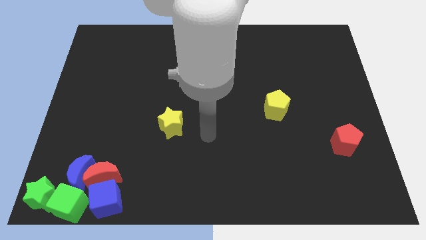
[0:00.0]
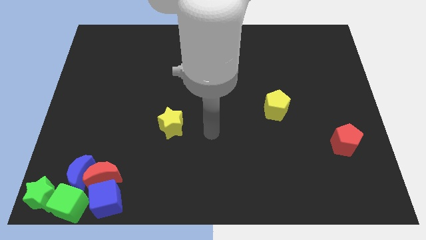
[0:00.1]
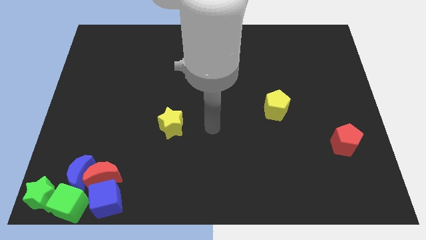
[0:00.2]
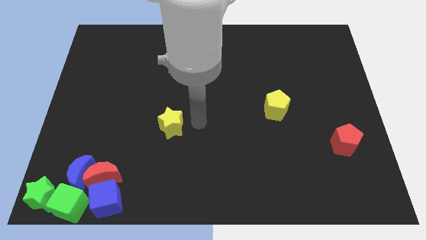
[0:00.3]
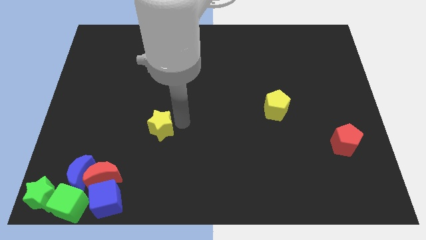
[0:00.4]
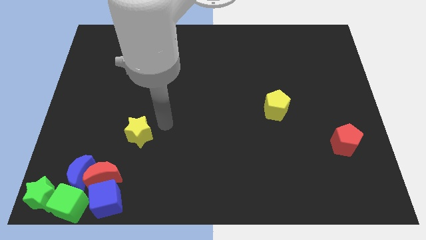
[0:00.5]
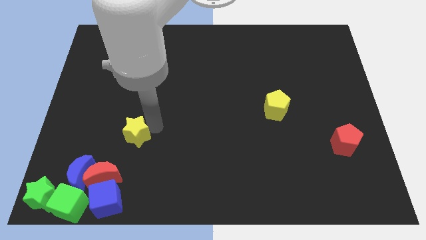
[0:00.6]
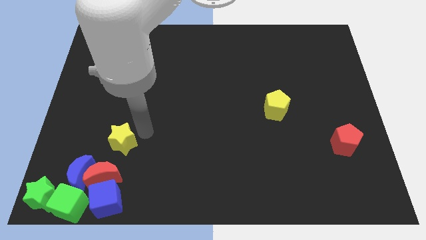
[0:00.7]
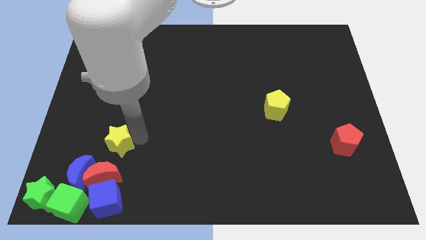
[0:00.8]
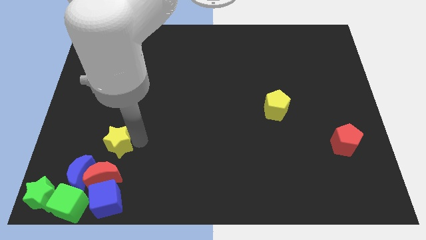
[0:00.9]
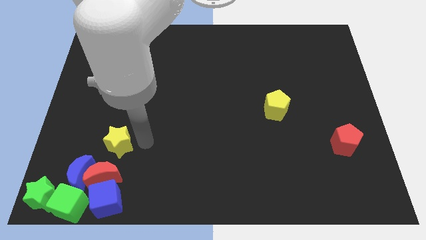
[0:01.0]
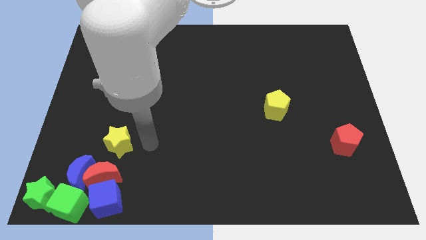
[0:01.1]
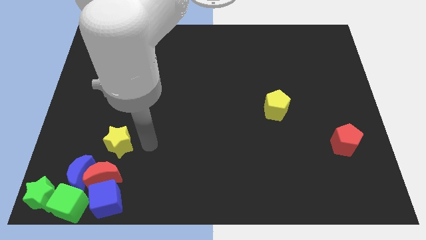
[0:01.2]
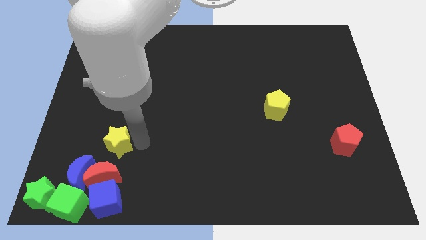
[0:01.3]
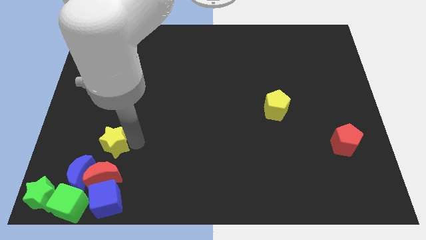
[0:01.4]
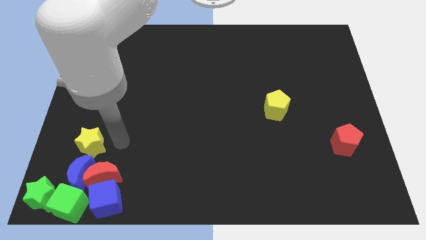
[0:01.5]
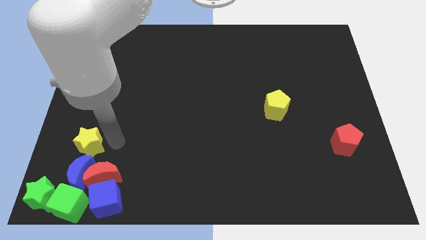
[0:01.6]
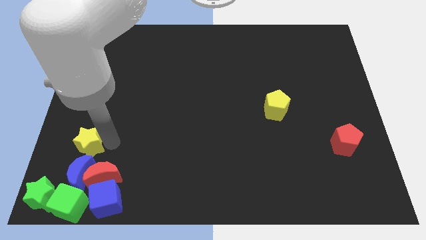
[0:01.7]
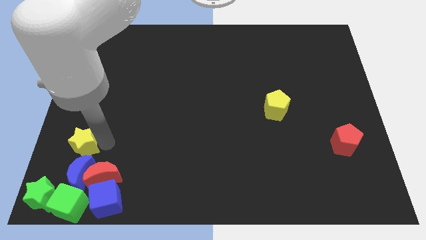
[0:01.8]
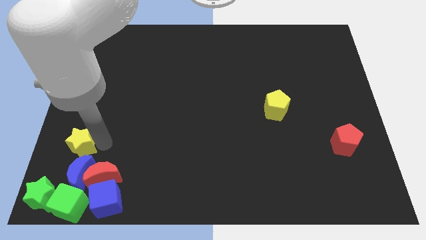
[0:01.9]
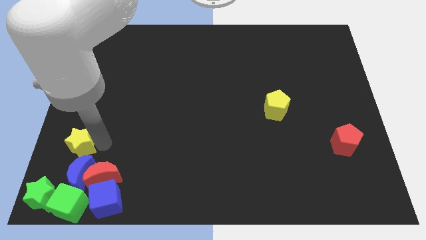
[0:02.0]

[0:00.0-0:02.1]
place the yellow star above the blue moon

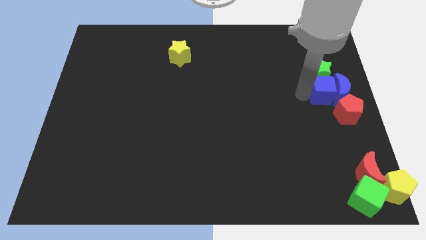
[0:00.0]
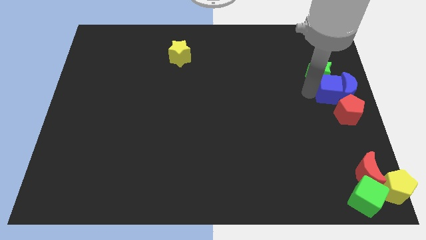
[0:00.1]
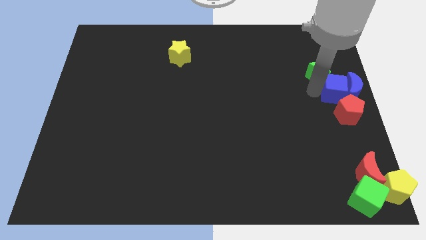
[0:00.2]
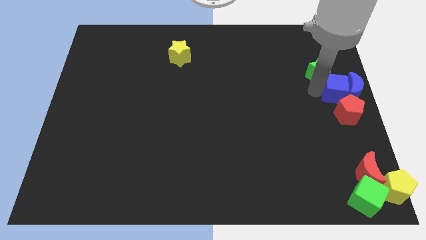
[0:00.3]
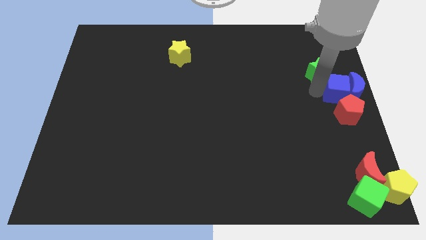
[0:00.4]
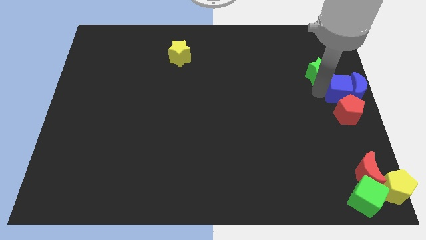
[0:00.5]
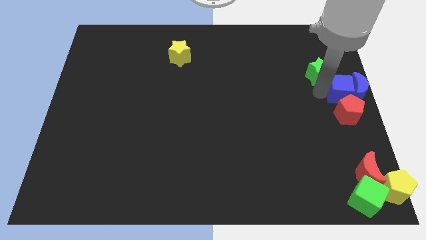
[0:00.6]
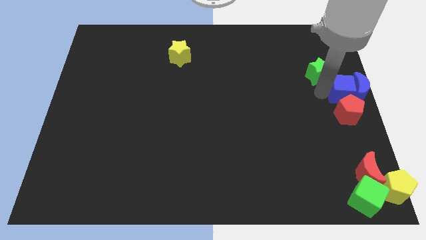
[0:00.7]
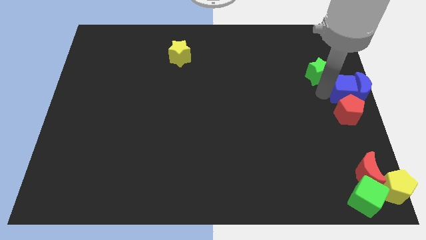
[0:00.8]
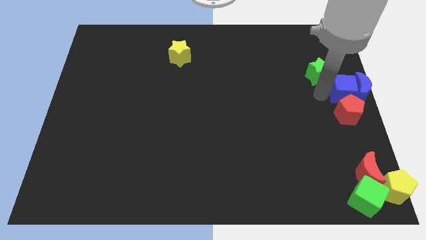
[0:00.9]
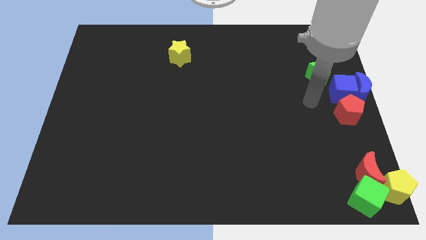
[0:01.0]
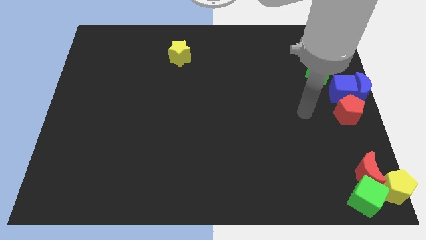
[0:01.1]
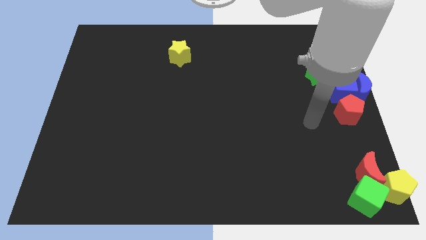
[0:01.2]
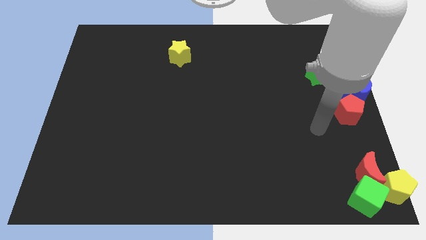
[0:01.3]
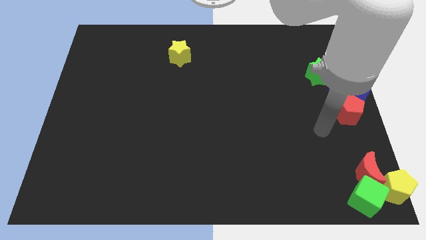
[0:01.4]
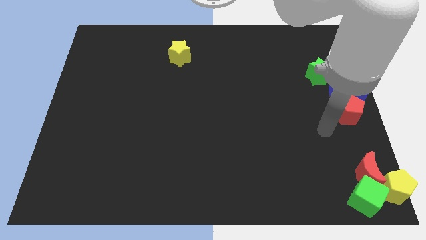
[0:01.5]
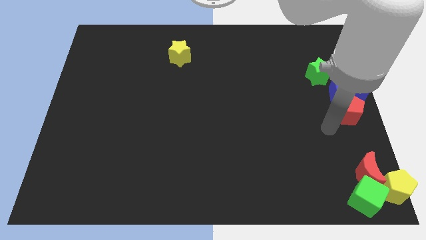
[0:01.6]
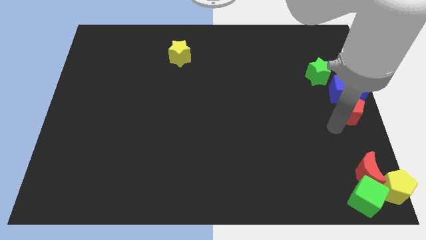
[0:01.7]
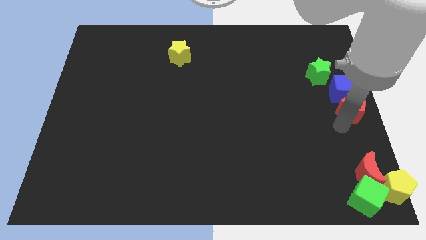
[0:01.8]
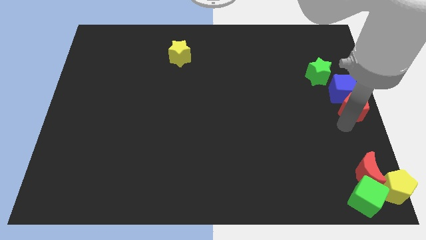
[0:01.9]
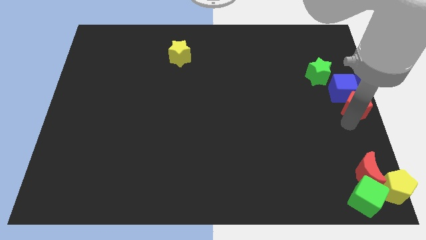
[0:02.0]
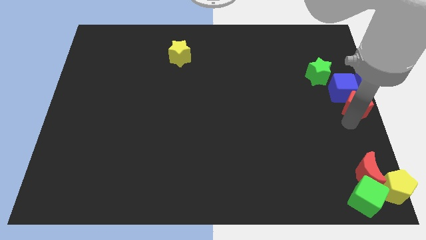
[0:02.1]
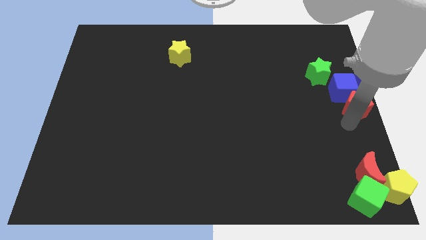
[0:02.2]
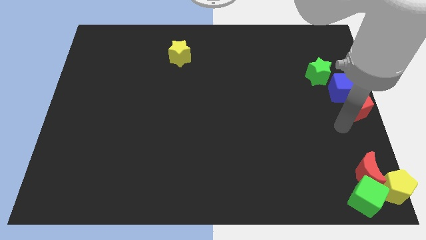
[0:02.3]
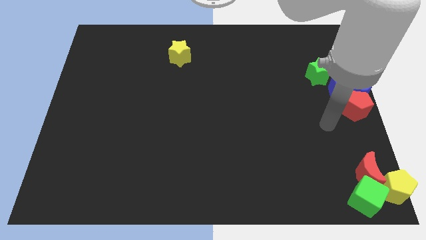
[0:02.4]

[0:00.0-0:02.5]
move the group of blocks to the centre right of the board

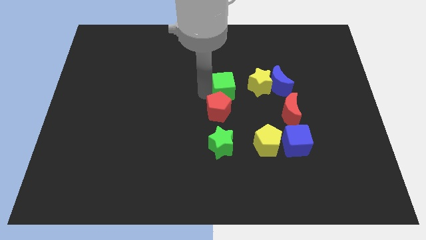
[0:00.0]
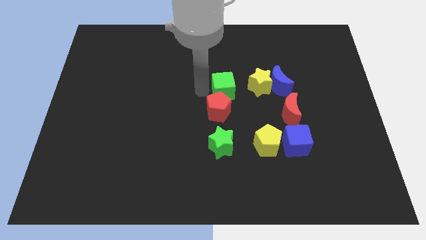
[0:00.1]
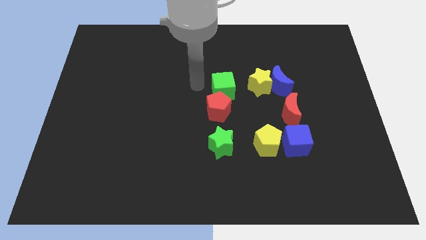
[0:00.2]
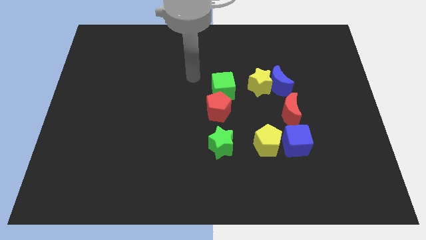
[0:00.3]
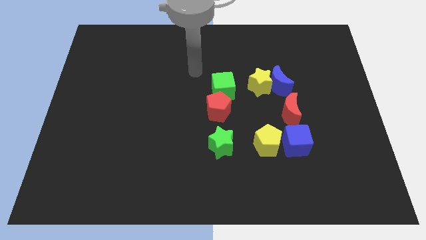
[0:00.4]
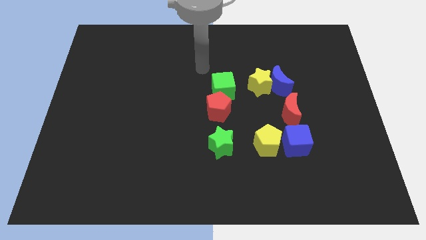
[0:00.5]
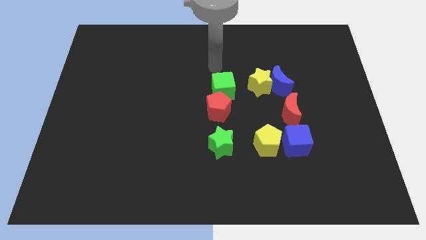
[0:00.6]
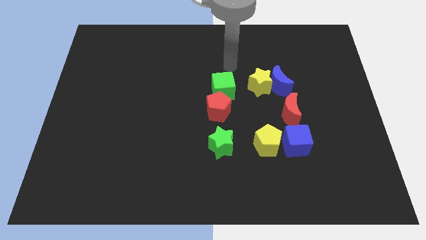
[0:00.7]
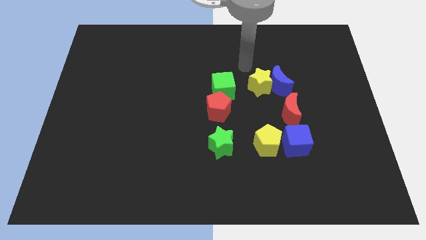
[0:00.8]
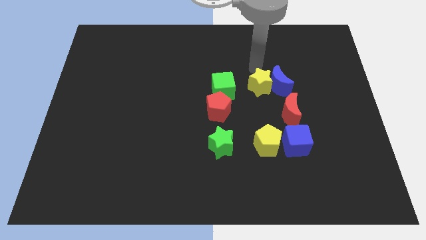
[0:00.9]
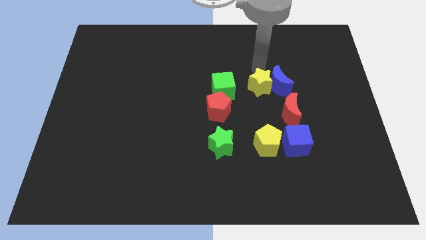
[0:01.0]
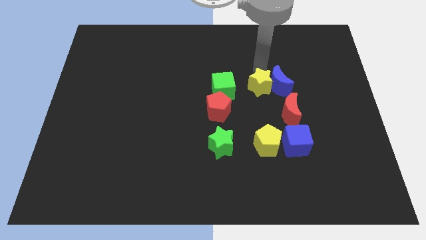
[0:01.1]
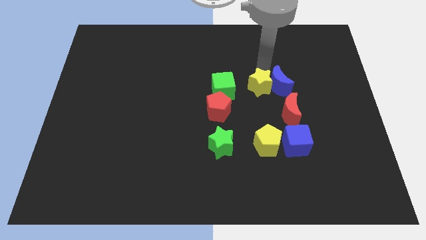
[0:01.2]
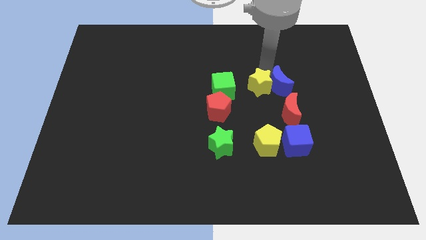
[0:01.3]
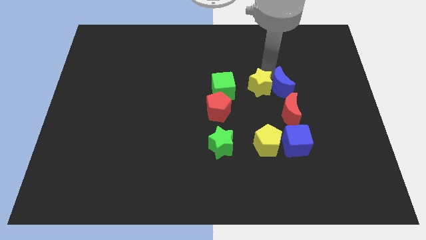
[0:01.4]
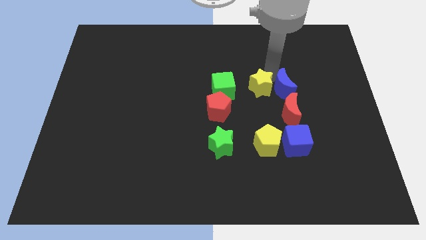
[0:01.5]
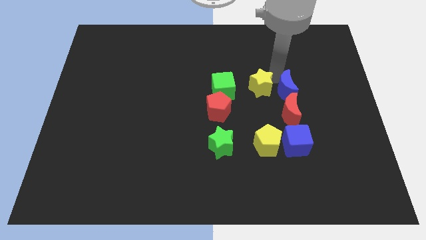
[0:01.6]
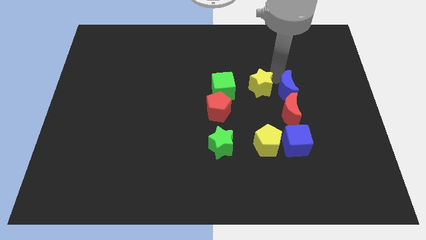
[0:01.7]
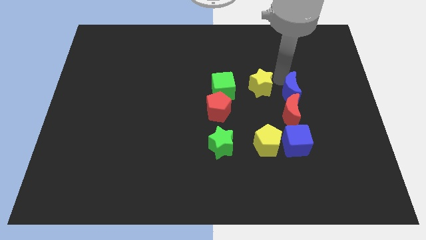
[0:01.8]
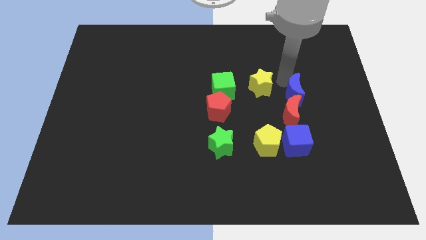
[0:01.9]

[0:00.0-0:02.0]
move your arm into the blue crescent

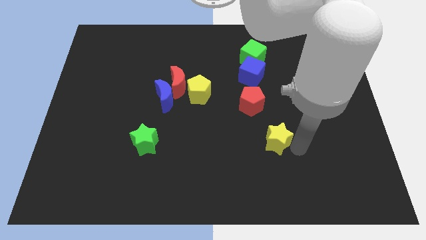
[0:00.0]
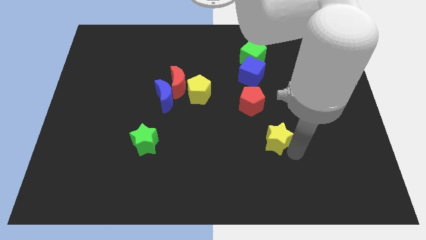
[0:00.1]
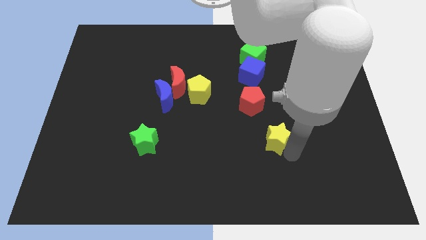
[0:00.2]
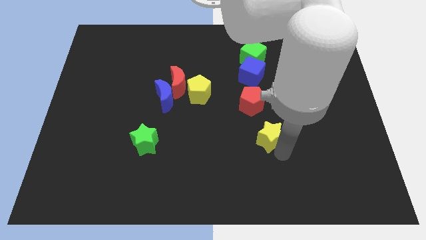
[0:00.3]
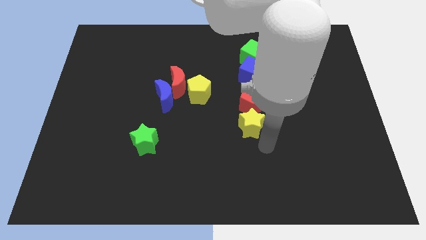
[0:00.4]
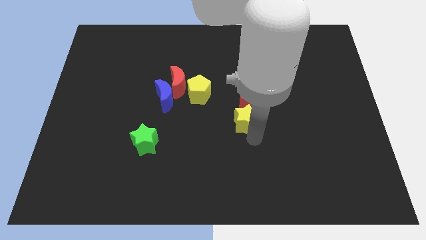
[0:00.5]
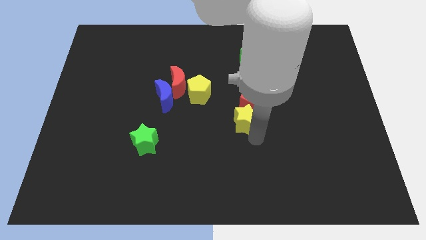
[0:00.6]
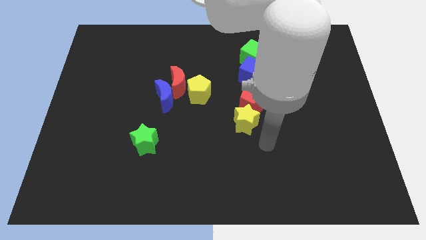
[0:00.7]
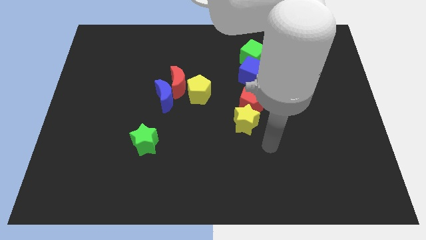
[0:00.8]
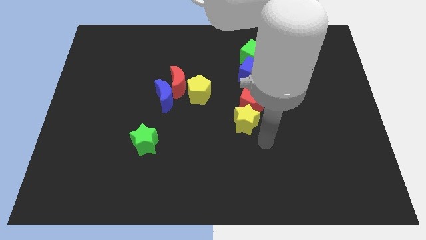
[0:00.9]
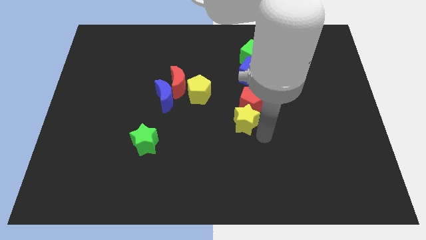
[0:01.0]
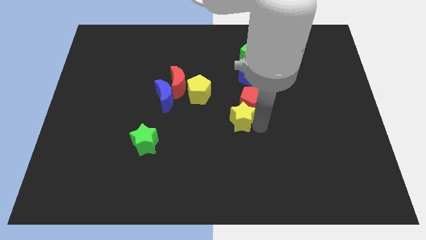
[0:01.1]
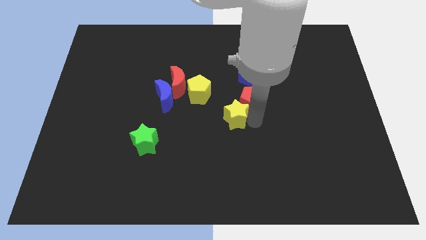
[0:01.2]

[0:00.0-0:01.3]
drag the yellow star into the red pentagon

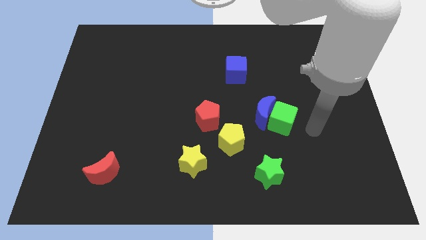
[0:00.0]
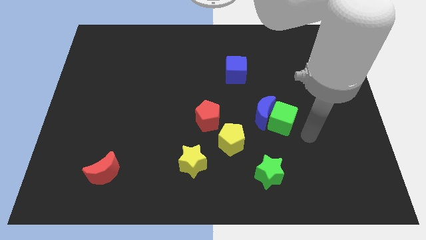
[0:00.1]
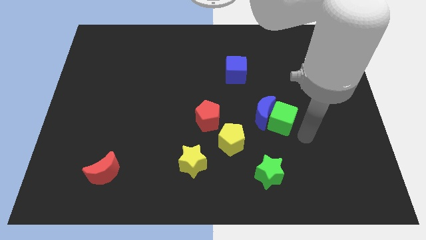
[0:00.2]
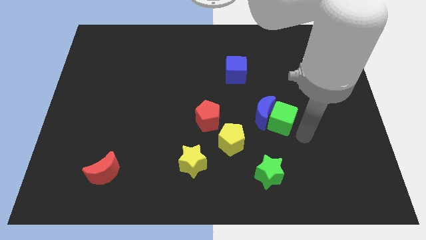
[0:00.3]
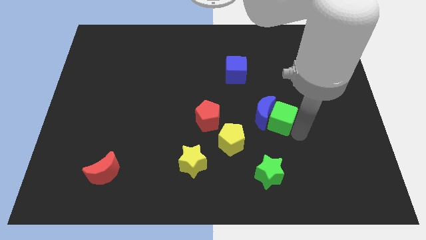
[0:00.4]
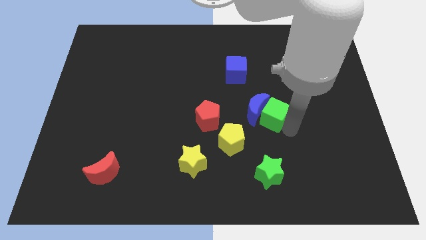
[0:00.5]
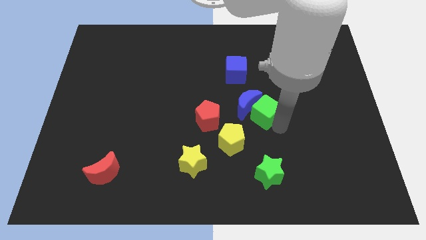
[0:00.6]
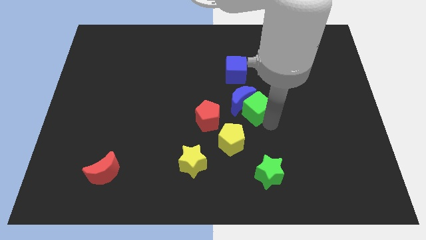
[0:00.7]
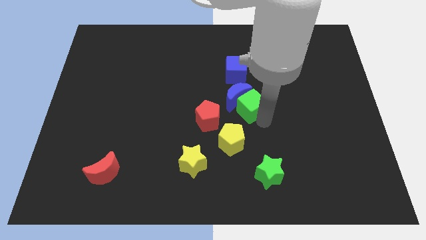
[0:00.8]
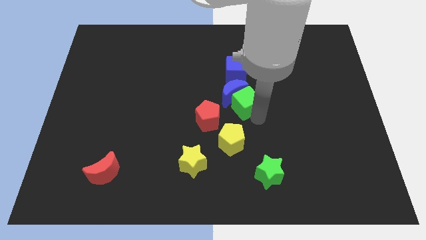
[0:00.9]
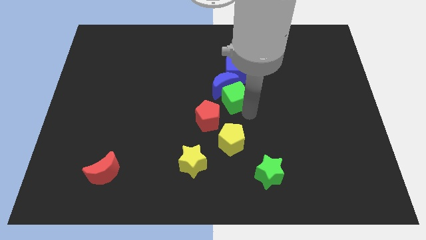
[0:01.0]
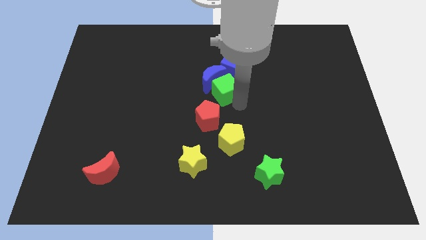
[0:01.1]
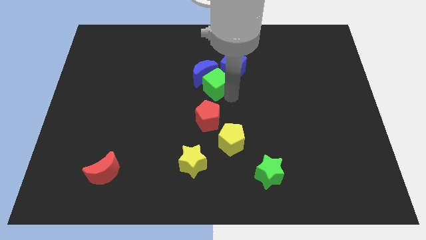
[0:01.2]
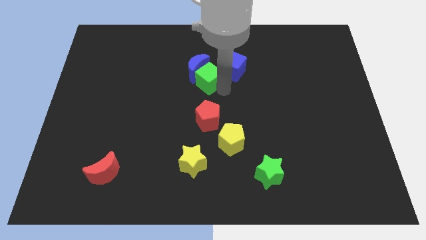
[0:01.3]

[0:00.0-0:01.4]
push the green cube along with the blue moon towards the top
